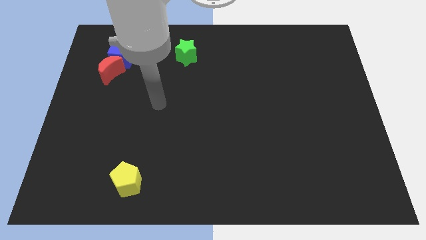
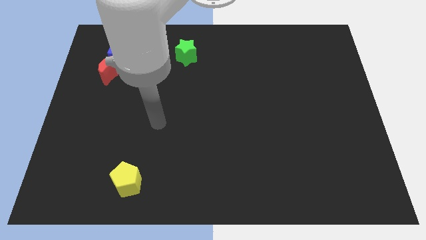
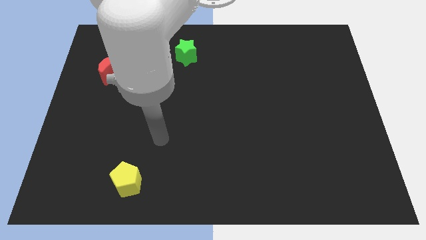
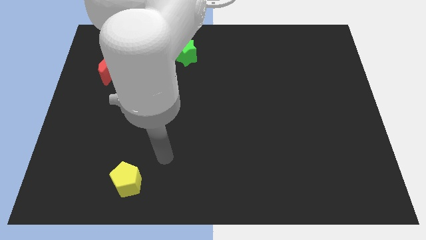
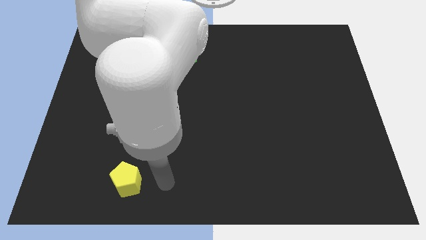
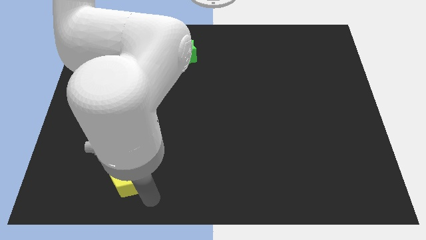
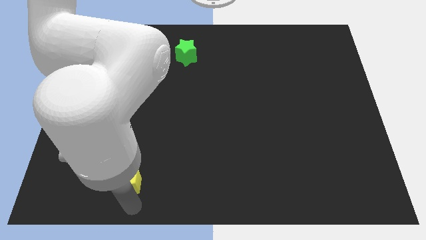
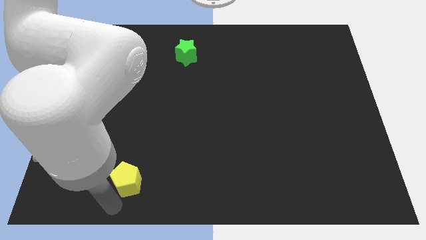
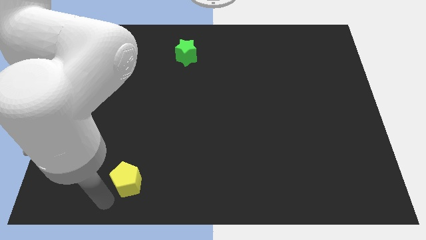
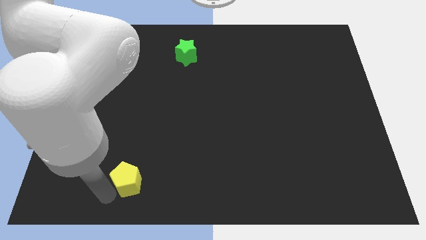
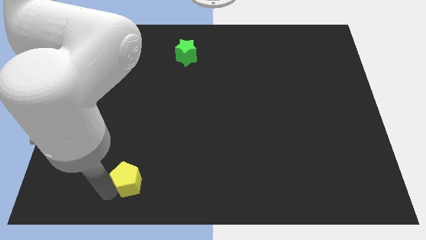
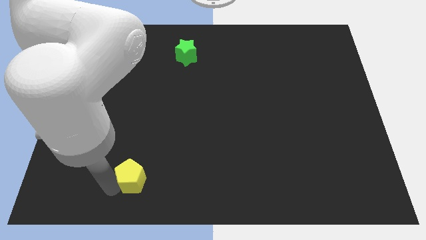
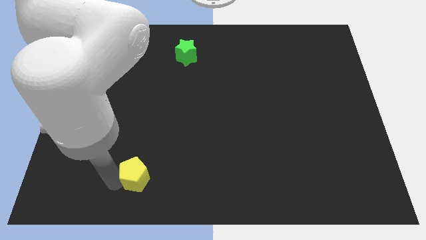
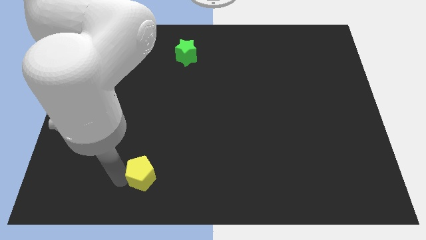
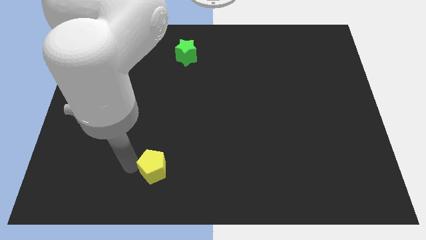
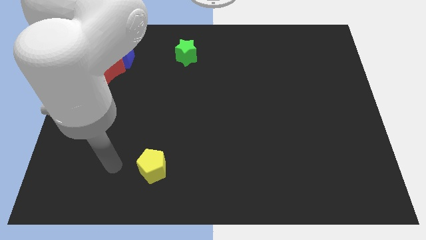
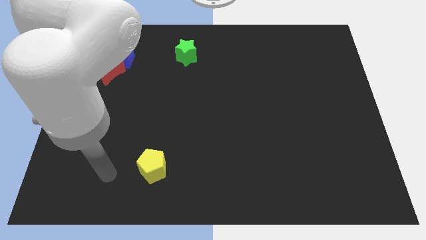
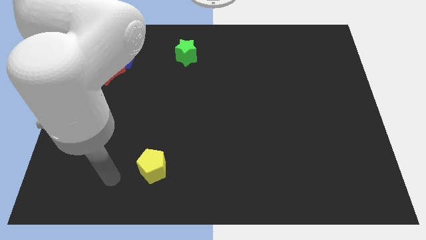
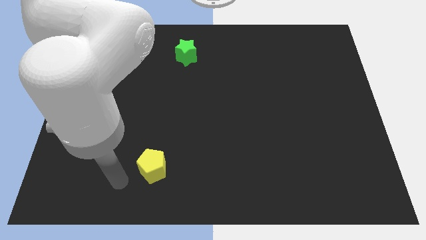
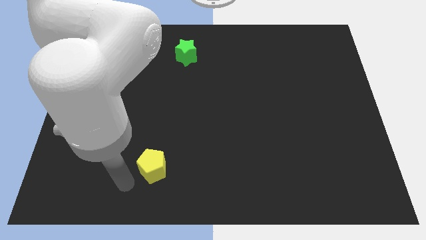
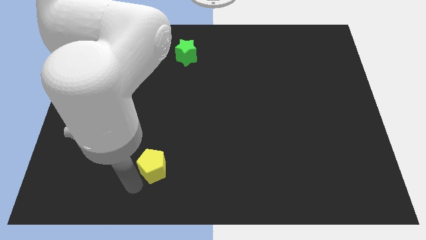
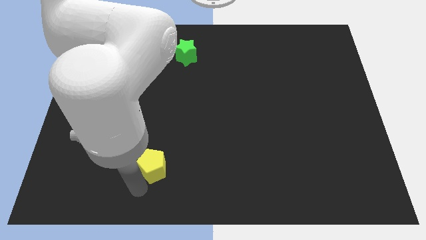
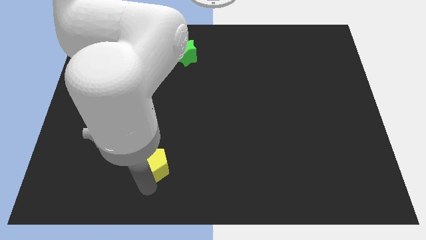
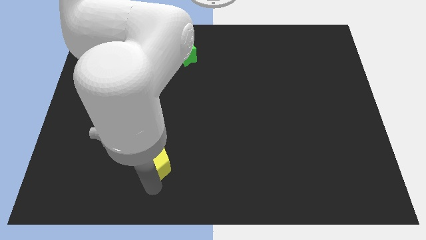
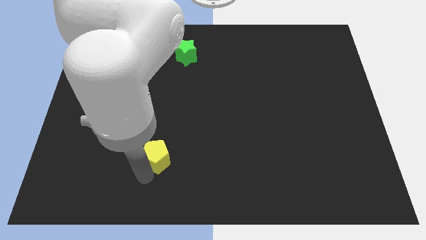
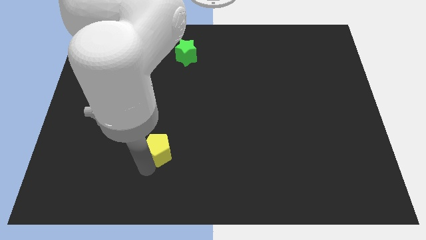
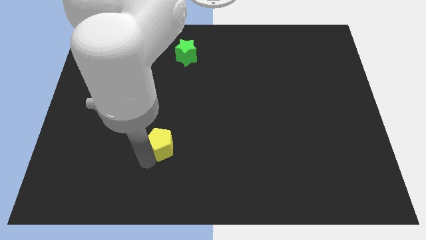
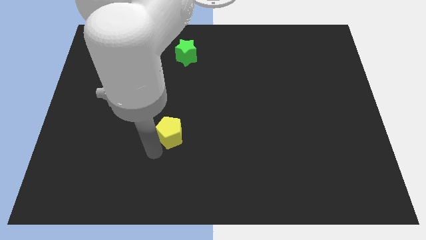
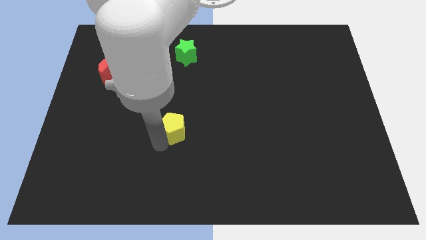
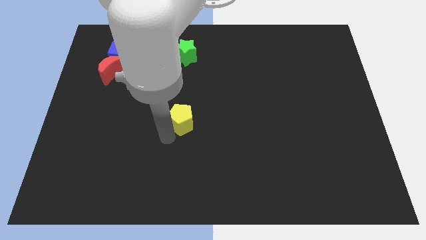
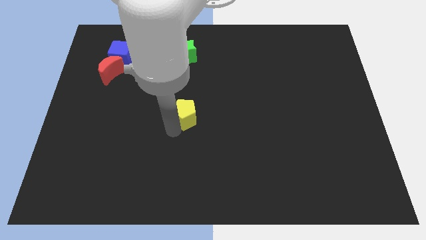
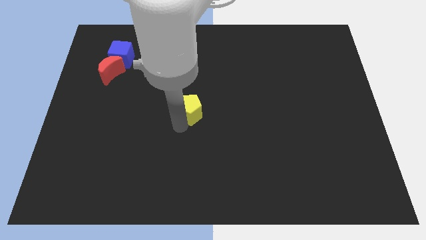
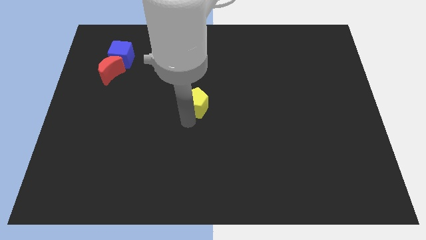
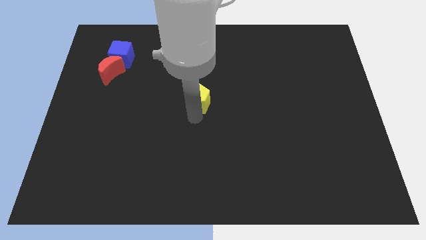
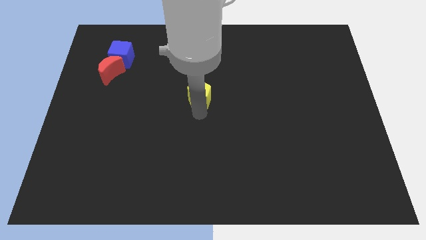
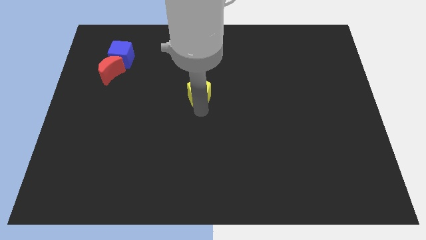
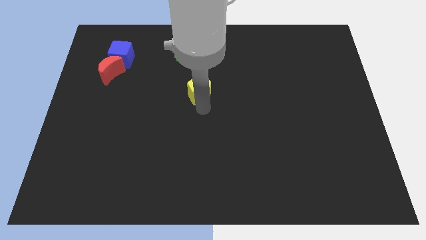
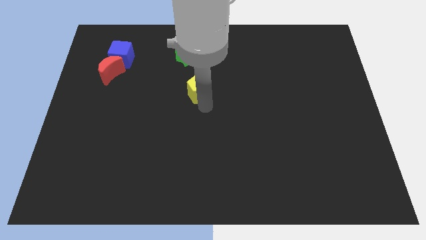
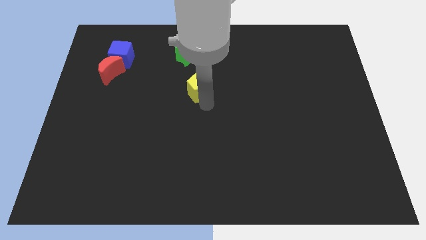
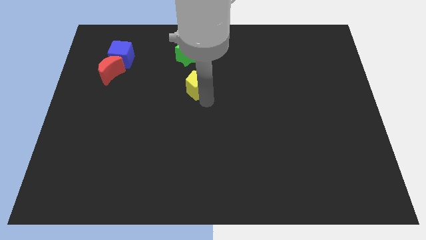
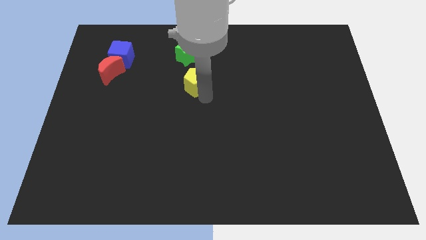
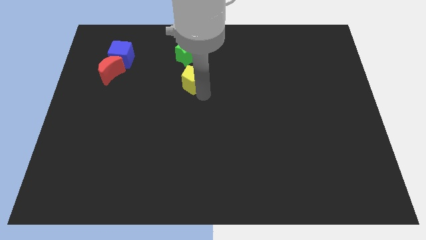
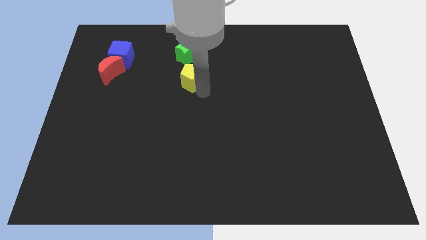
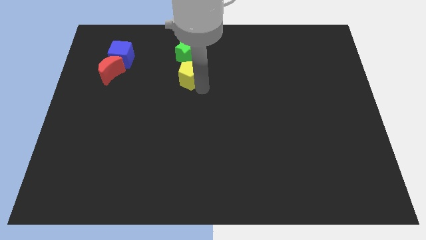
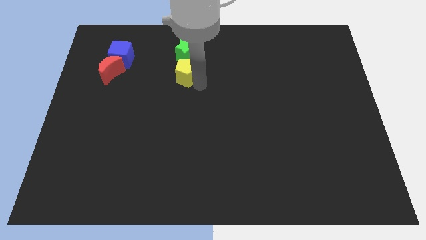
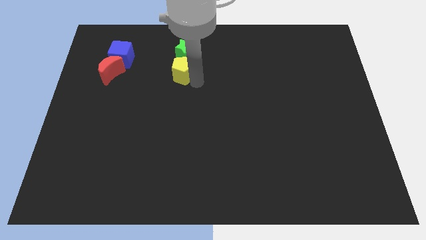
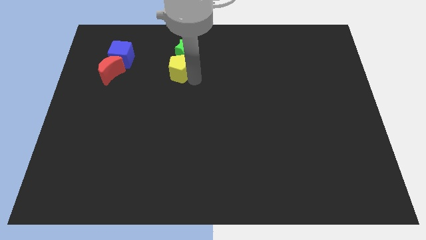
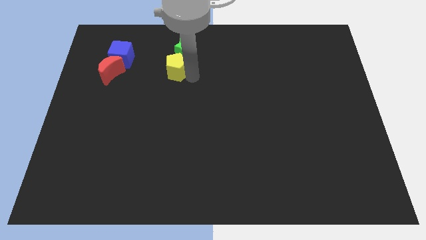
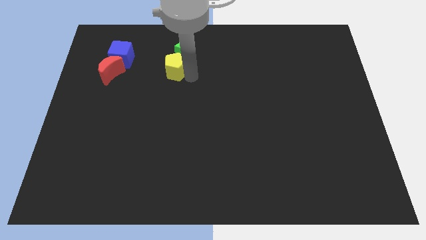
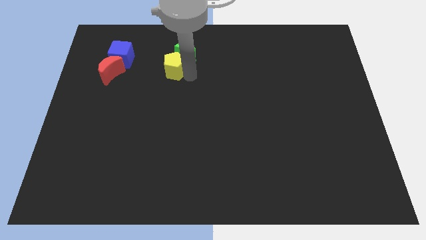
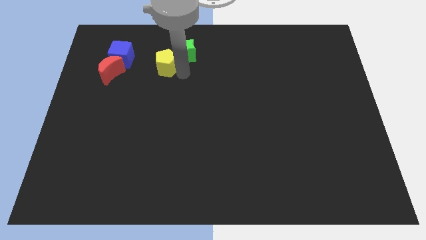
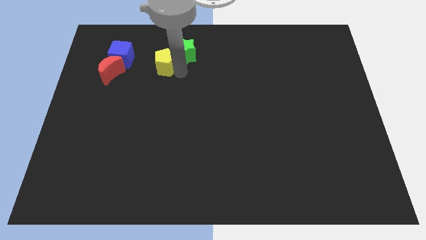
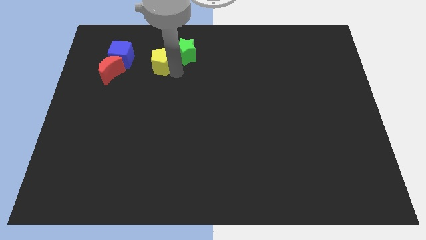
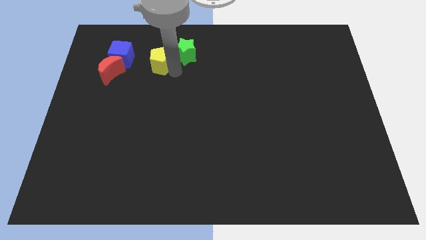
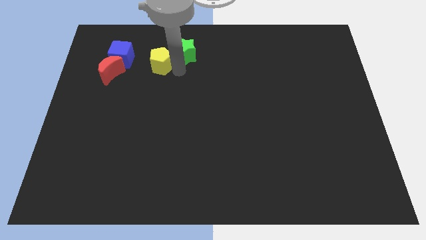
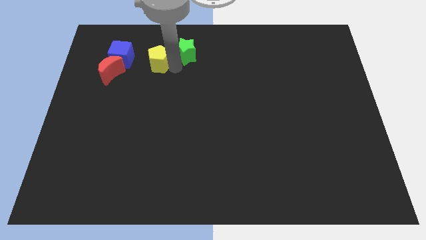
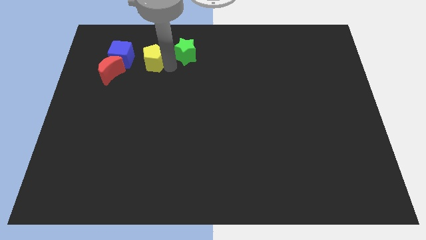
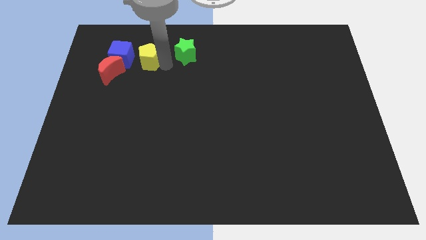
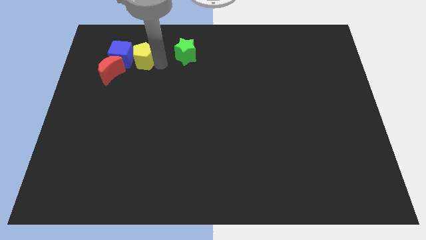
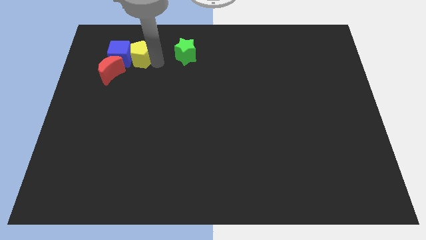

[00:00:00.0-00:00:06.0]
push the yellow block next to the cube

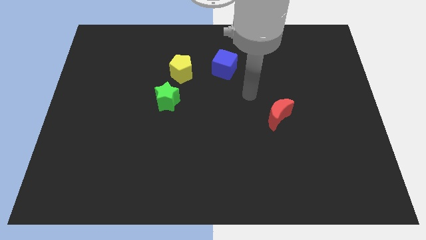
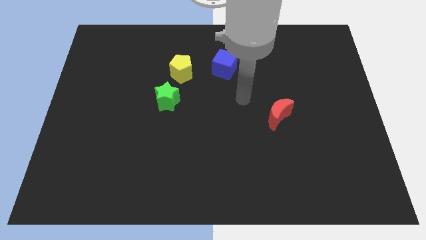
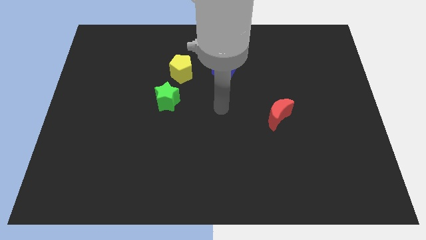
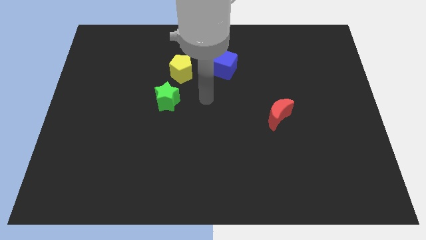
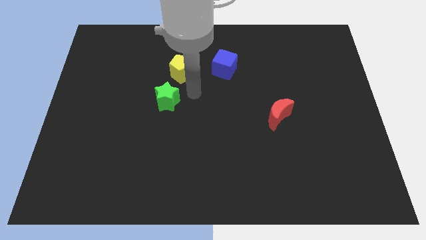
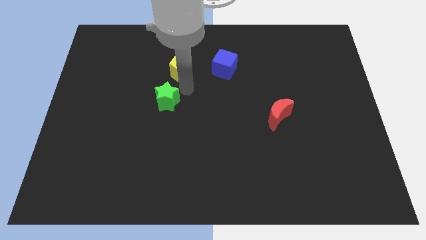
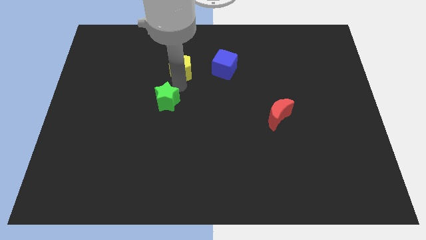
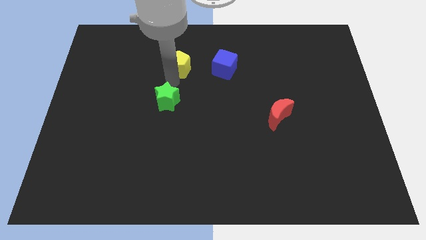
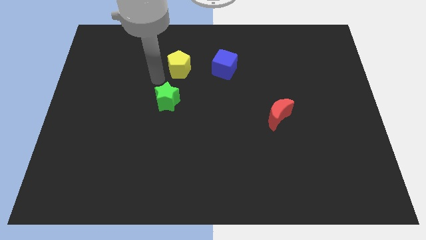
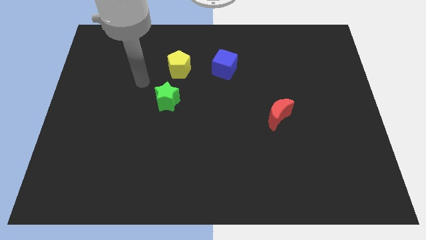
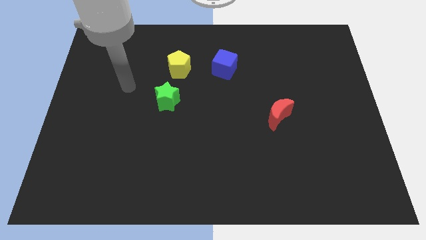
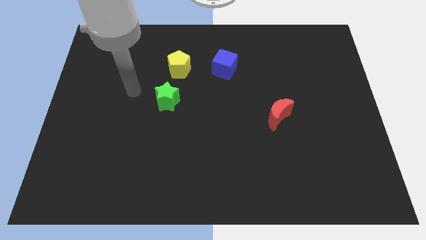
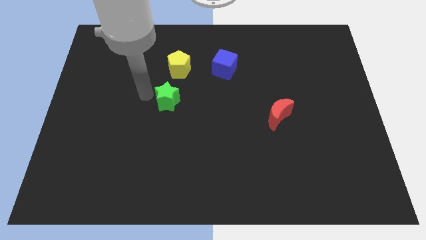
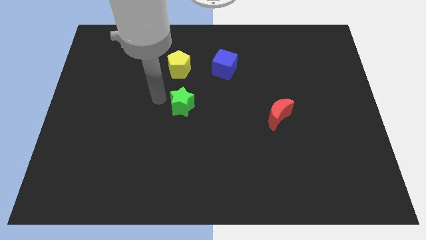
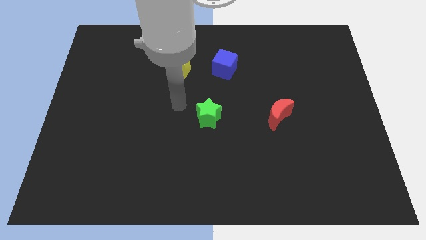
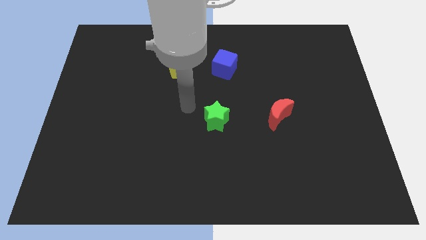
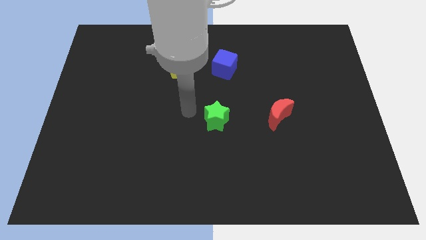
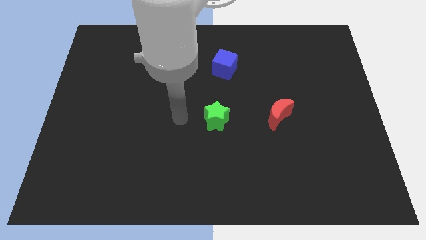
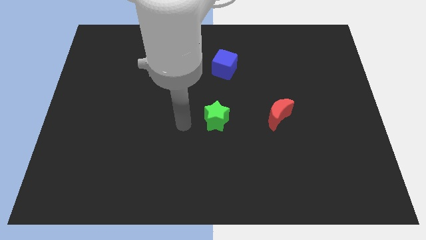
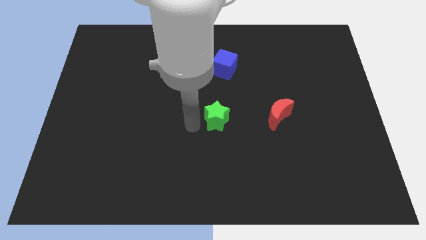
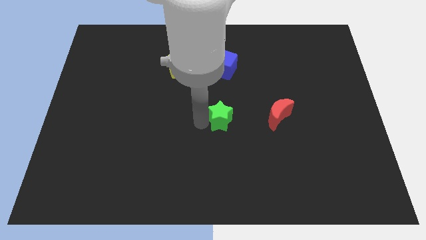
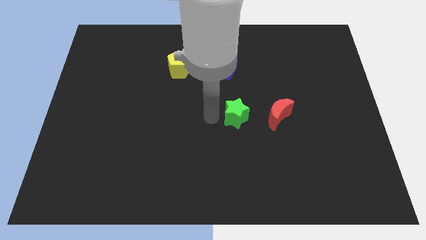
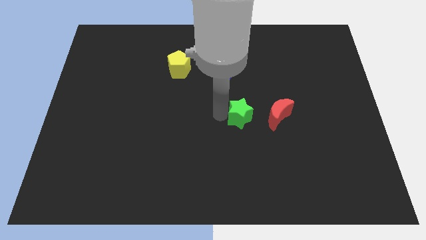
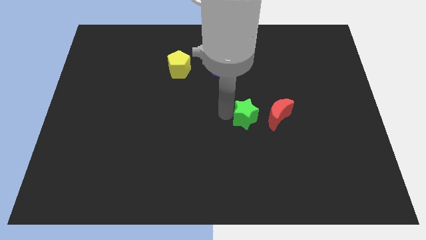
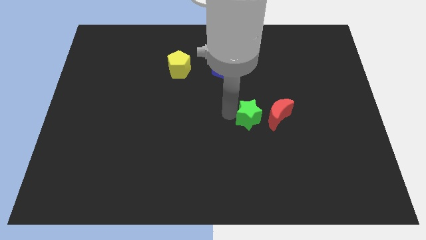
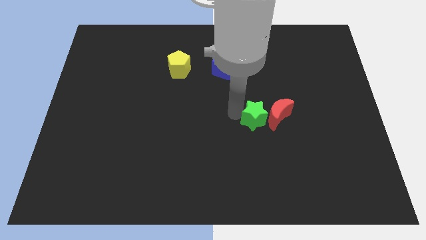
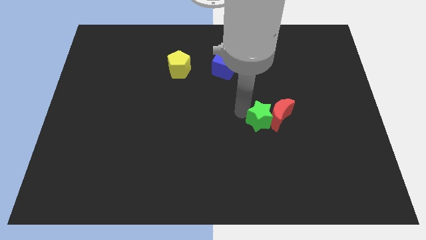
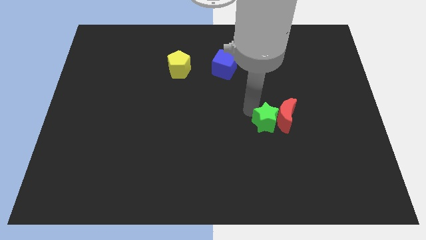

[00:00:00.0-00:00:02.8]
push the green star next to the moon
